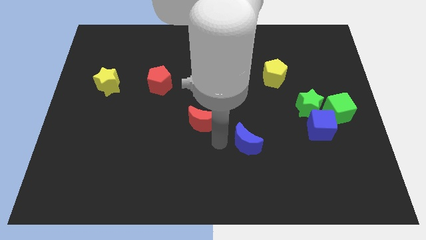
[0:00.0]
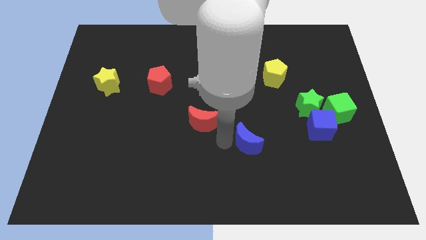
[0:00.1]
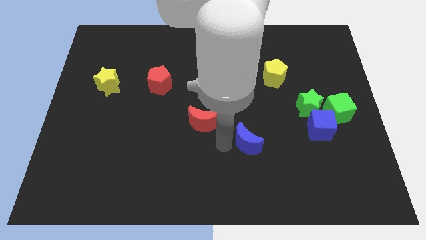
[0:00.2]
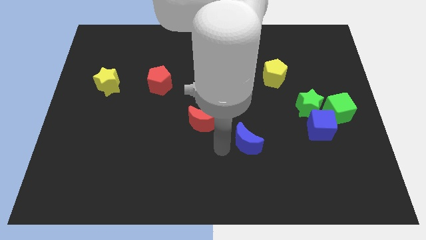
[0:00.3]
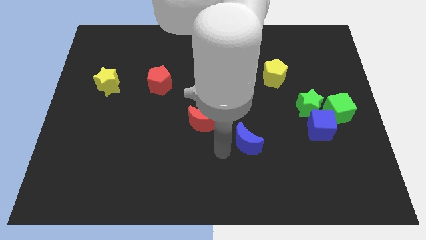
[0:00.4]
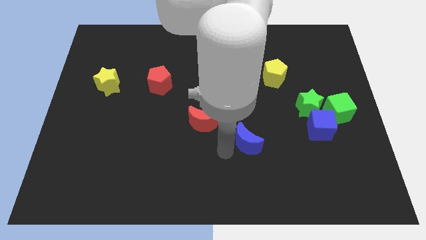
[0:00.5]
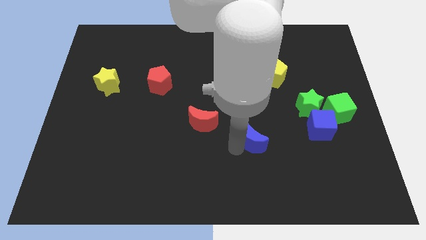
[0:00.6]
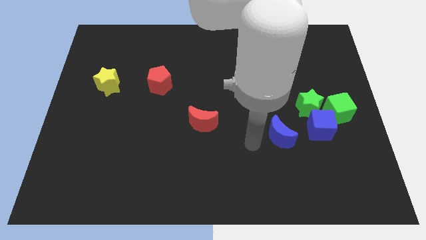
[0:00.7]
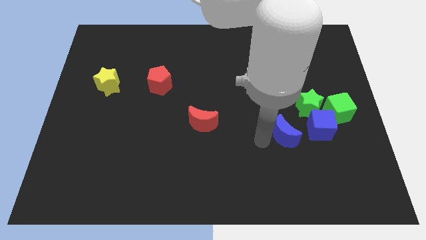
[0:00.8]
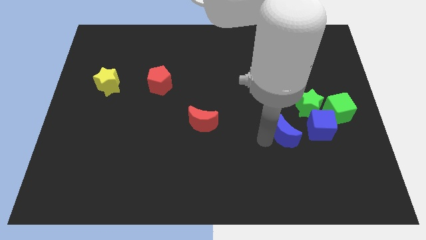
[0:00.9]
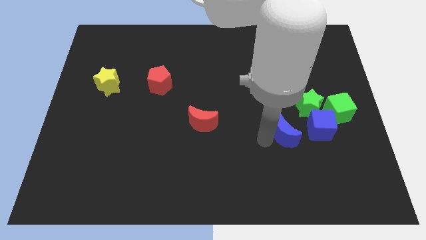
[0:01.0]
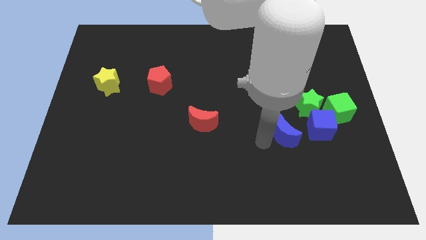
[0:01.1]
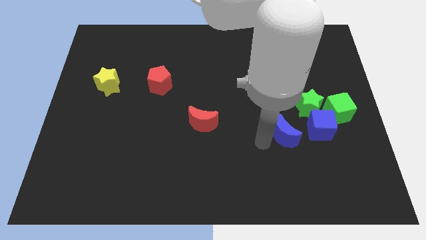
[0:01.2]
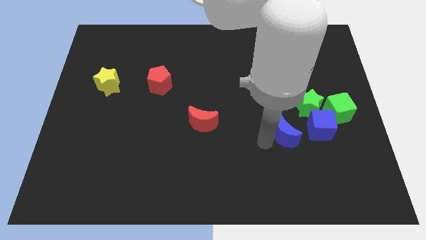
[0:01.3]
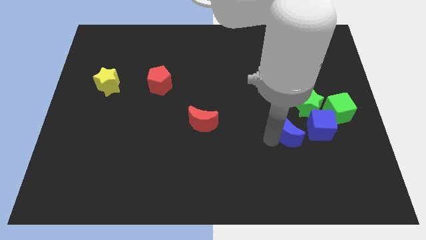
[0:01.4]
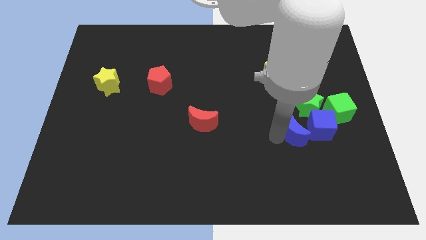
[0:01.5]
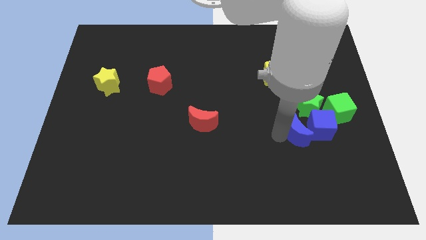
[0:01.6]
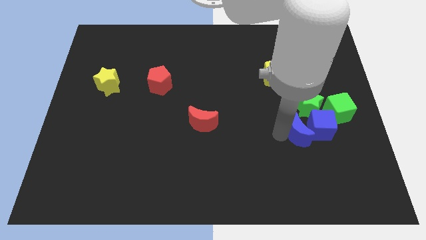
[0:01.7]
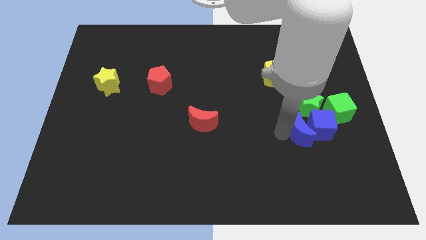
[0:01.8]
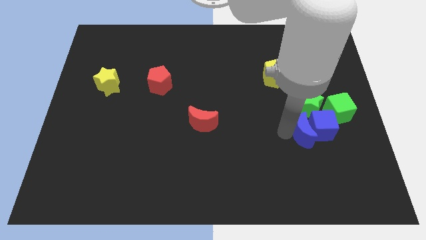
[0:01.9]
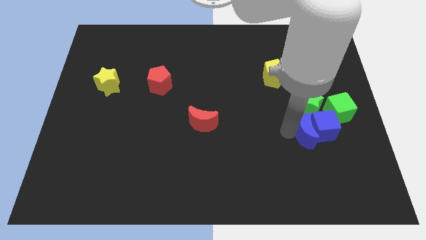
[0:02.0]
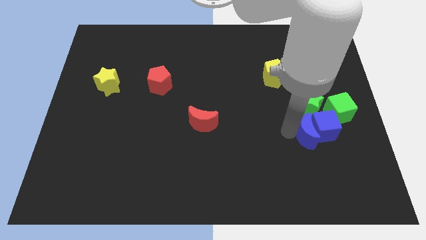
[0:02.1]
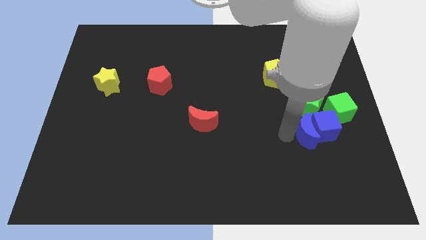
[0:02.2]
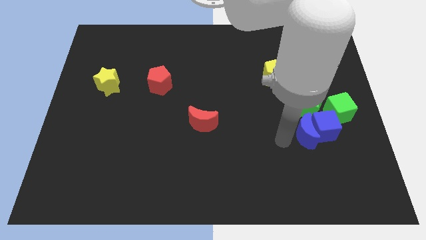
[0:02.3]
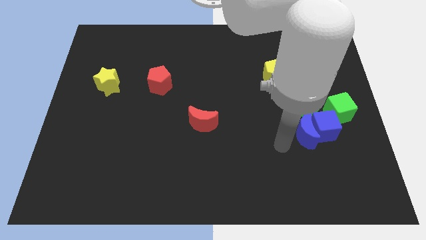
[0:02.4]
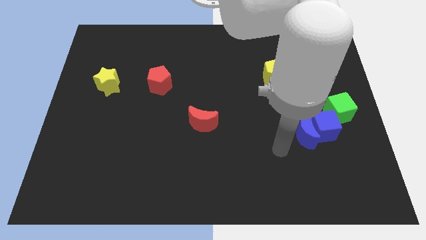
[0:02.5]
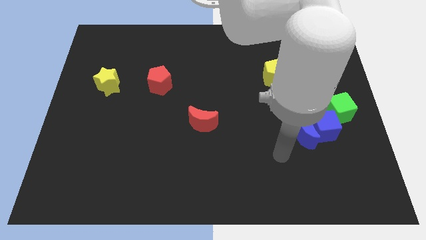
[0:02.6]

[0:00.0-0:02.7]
move the blue crescent into the blue cube

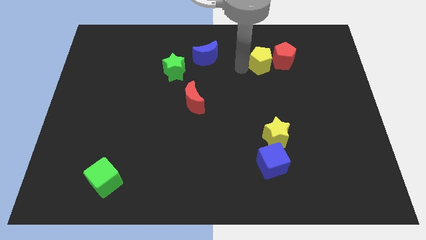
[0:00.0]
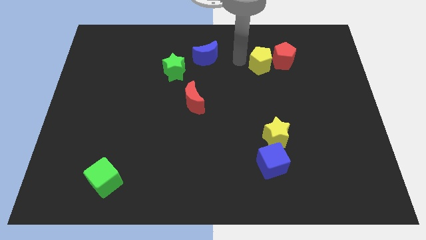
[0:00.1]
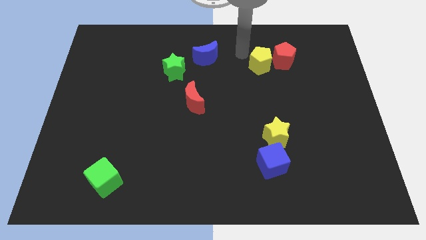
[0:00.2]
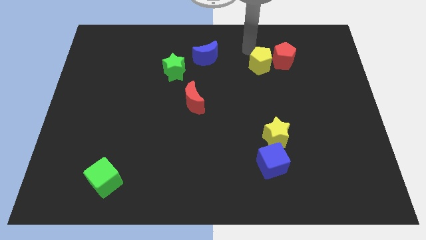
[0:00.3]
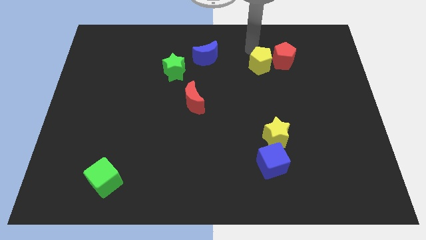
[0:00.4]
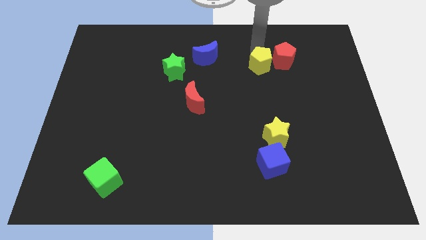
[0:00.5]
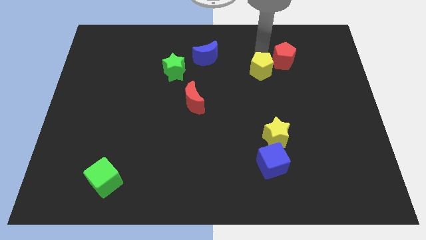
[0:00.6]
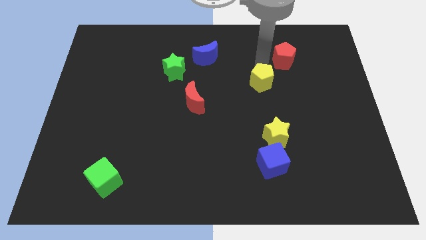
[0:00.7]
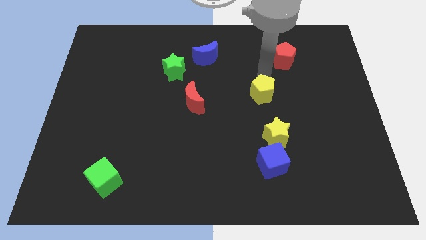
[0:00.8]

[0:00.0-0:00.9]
push the yellow pentagon to the bottom left of the red pentagon

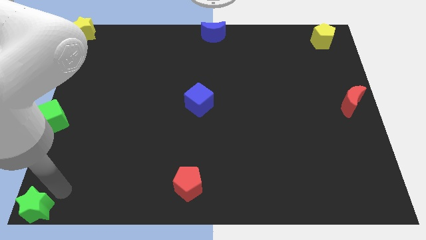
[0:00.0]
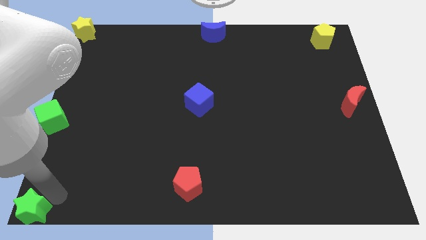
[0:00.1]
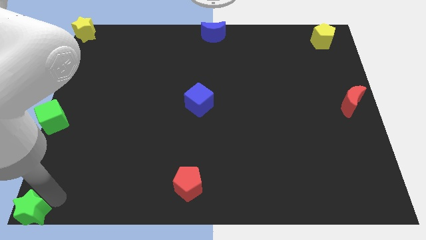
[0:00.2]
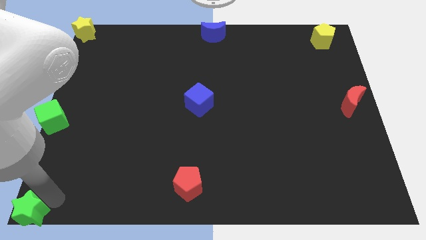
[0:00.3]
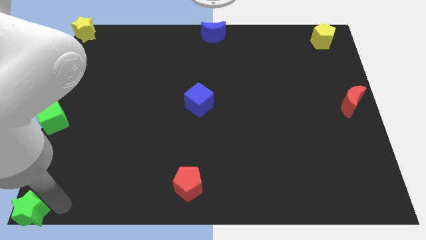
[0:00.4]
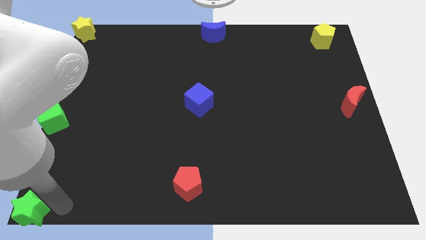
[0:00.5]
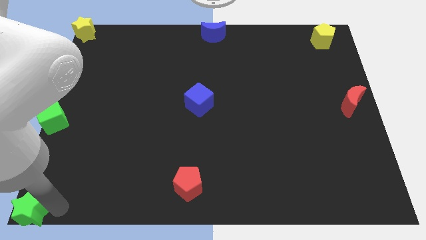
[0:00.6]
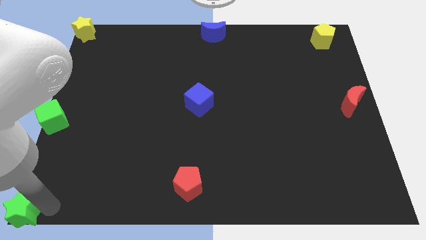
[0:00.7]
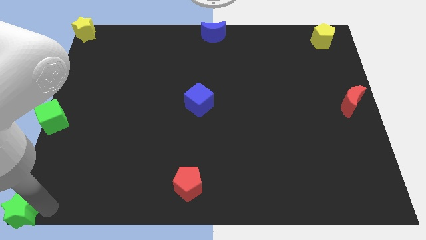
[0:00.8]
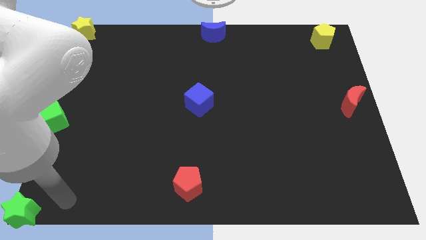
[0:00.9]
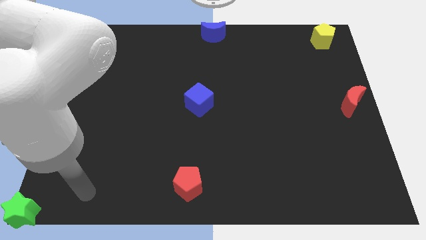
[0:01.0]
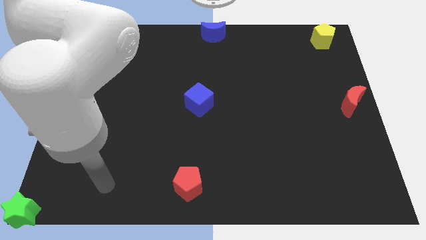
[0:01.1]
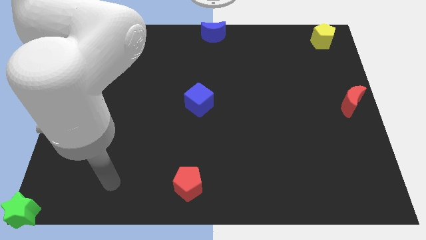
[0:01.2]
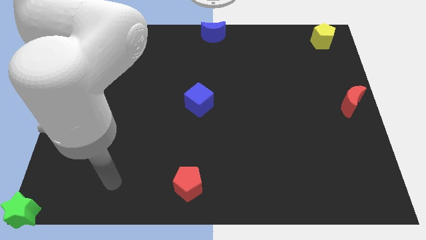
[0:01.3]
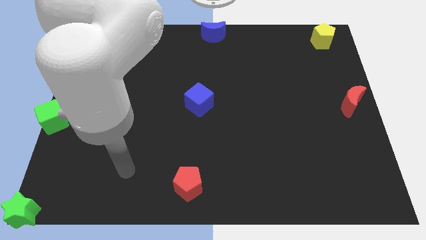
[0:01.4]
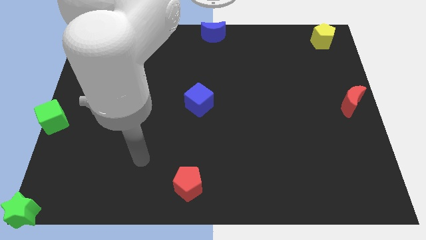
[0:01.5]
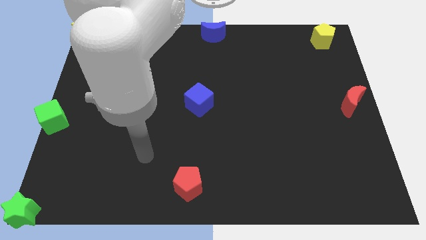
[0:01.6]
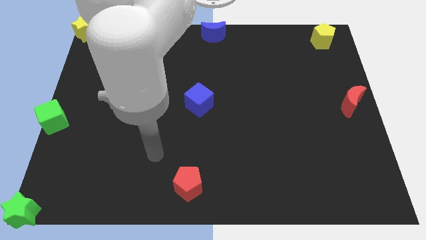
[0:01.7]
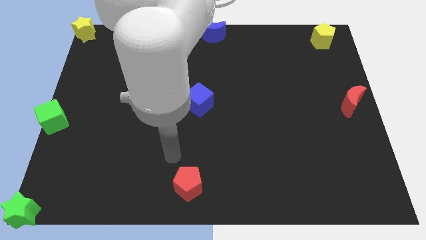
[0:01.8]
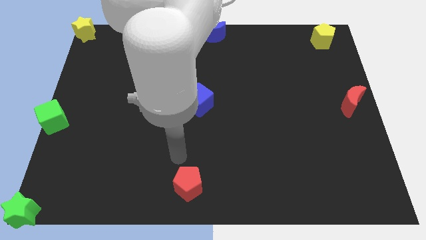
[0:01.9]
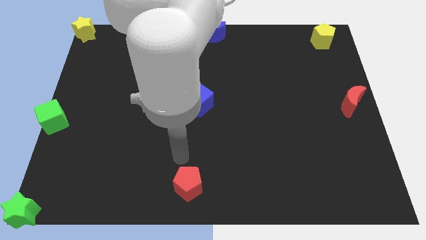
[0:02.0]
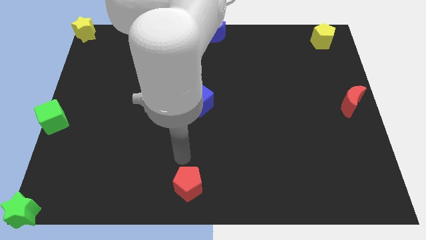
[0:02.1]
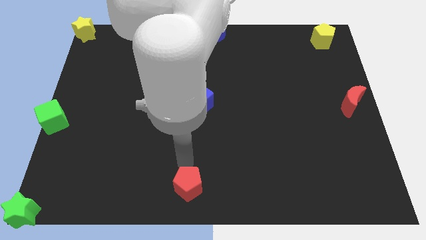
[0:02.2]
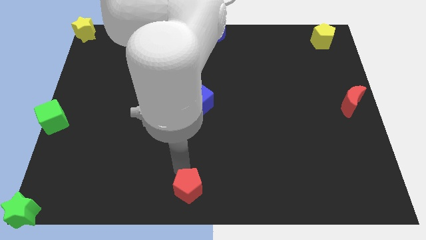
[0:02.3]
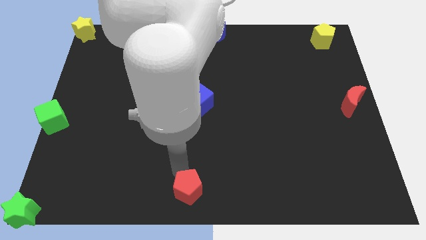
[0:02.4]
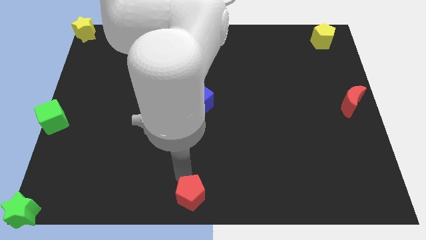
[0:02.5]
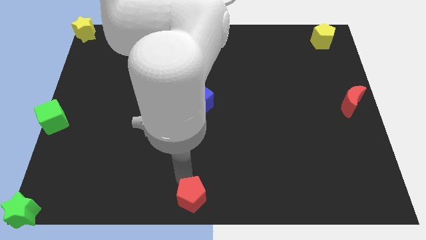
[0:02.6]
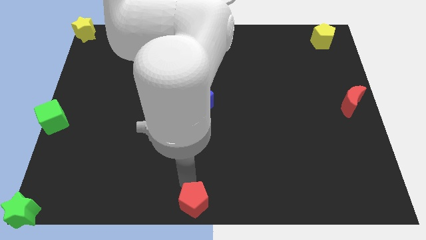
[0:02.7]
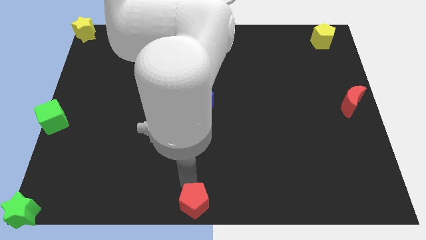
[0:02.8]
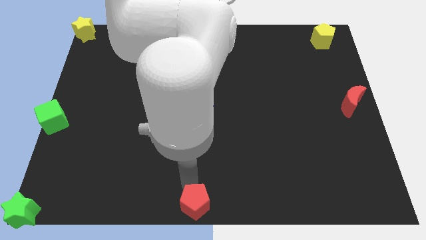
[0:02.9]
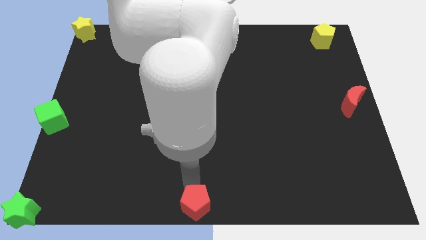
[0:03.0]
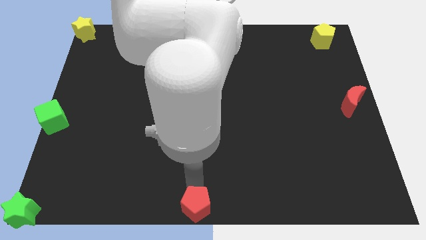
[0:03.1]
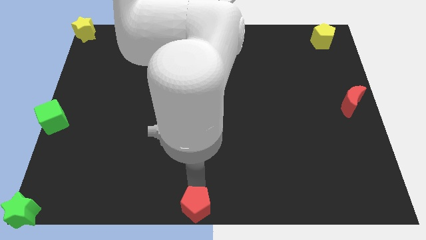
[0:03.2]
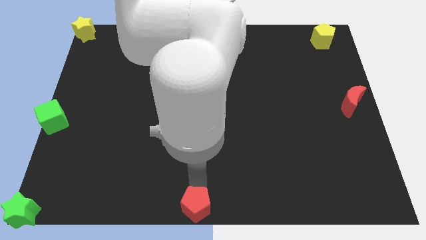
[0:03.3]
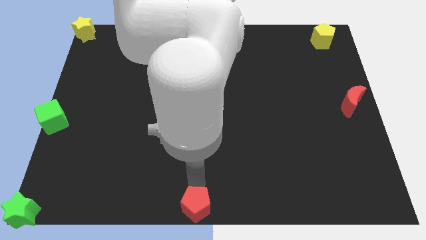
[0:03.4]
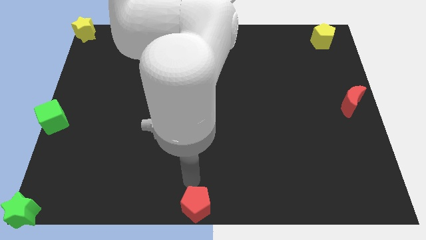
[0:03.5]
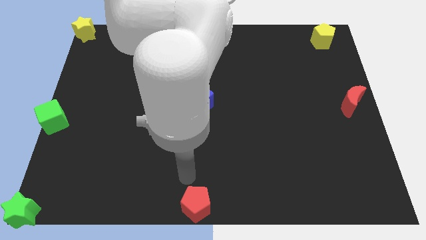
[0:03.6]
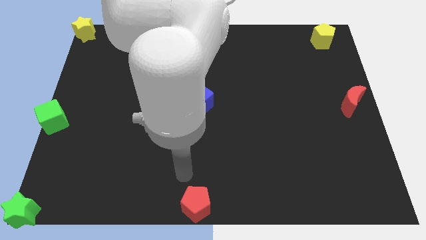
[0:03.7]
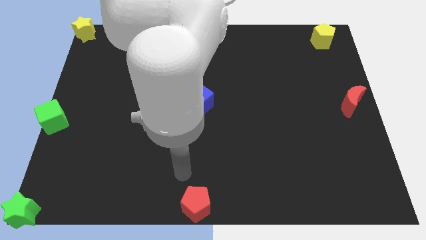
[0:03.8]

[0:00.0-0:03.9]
push red pentagon to the center bottom

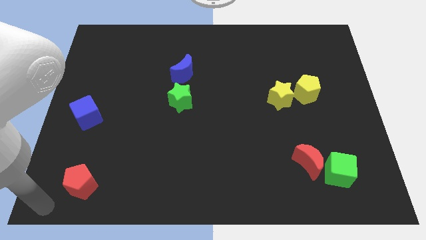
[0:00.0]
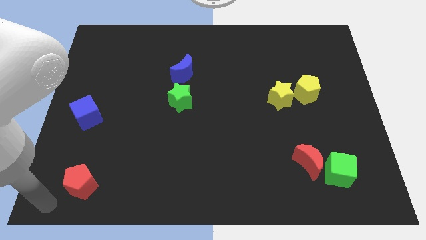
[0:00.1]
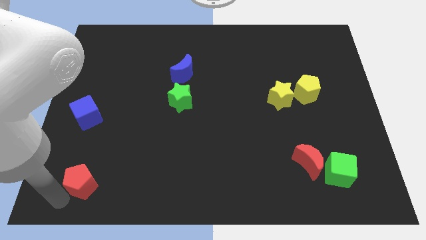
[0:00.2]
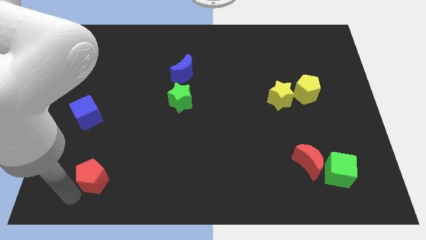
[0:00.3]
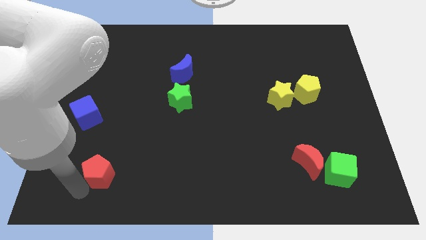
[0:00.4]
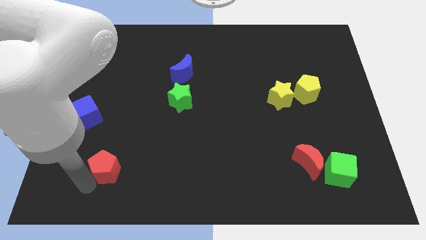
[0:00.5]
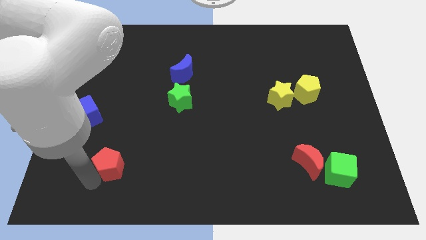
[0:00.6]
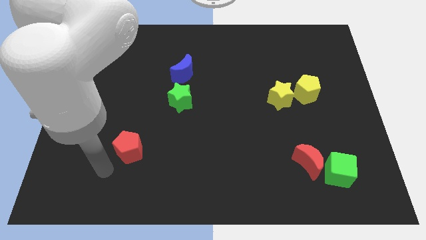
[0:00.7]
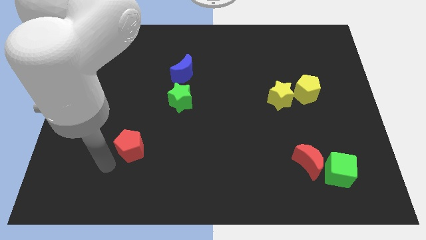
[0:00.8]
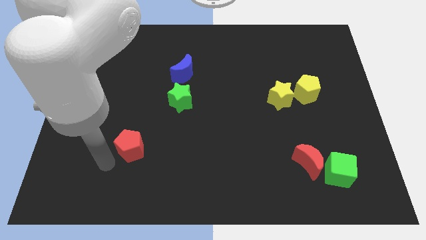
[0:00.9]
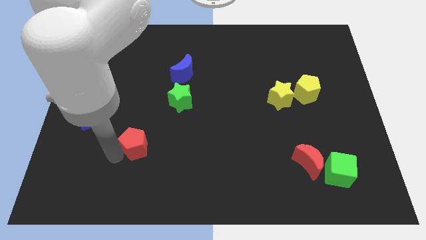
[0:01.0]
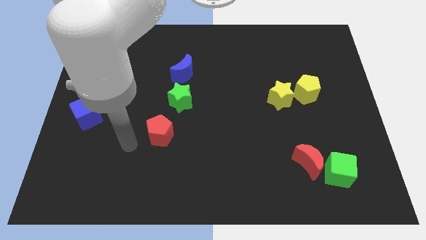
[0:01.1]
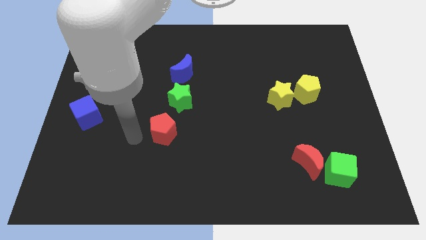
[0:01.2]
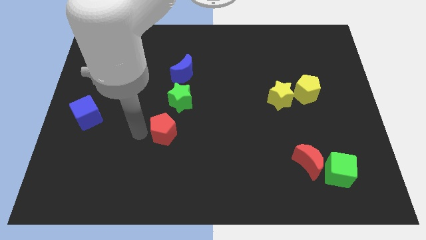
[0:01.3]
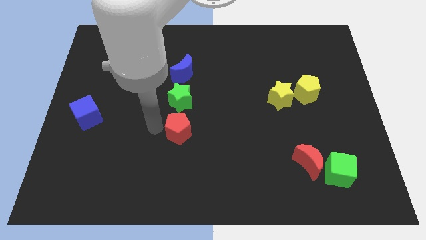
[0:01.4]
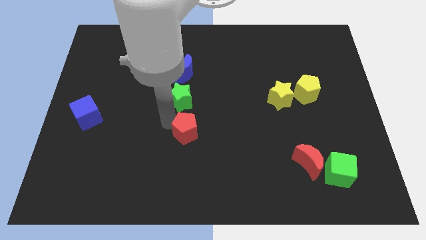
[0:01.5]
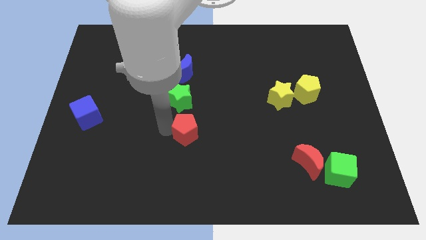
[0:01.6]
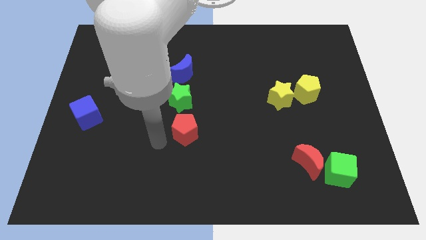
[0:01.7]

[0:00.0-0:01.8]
slide the red pentagon to the bottom of the green star
